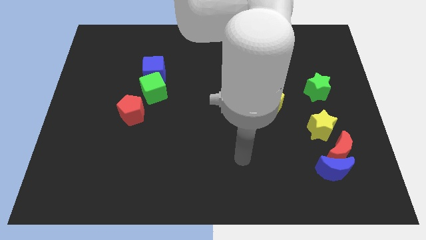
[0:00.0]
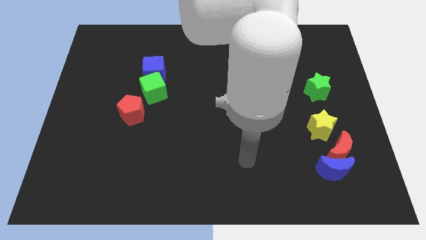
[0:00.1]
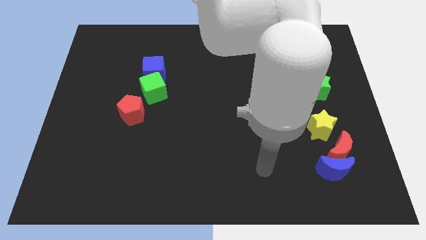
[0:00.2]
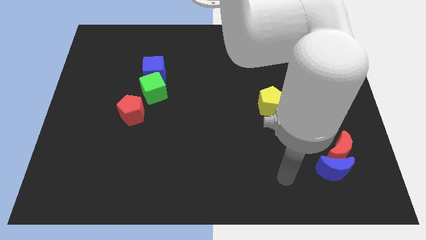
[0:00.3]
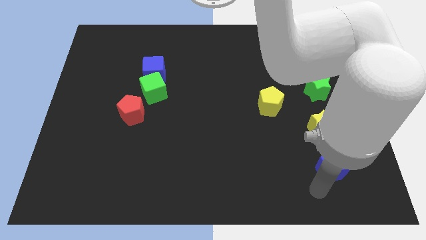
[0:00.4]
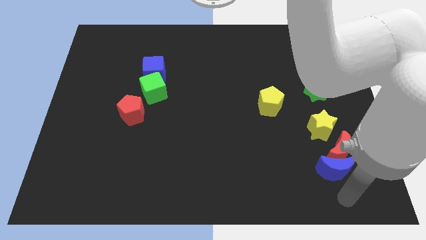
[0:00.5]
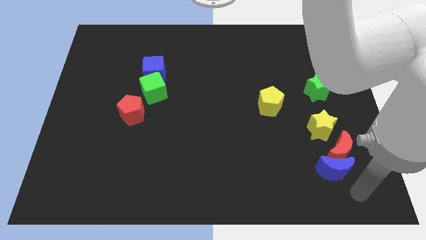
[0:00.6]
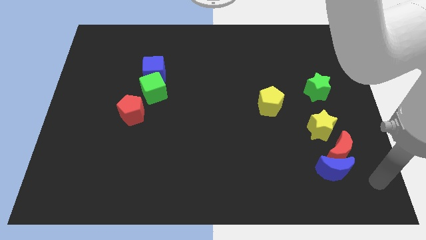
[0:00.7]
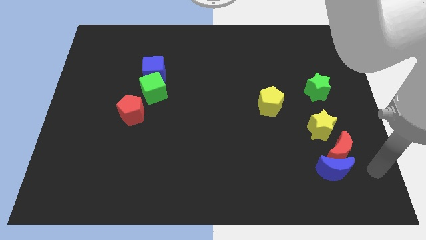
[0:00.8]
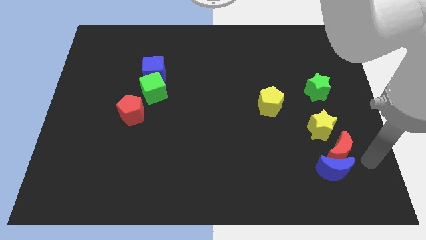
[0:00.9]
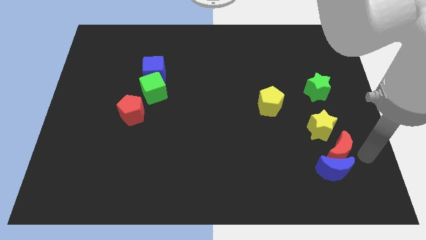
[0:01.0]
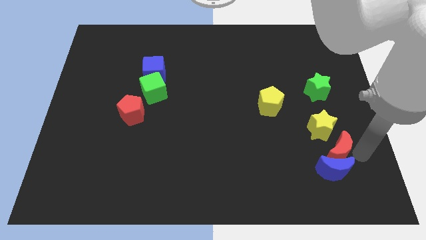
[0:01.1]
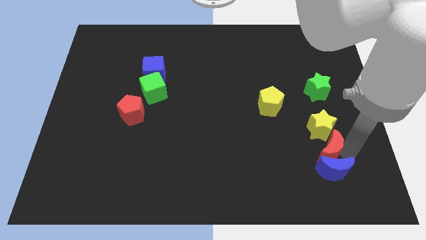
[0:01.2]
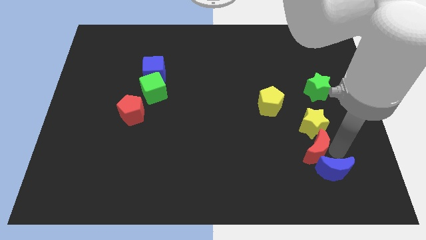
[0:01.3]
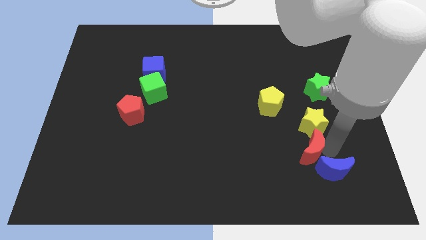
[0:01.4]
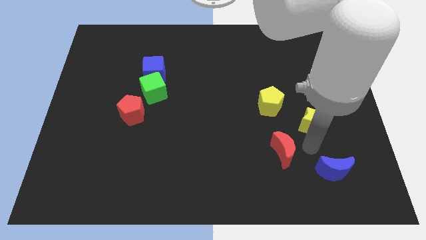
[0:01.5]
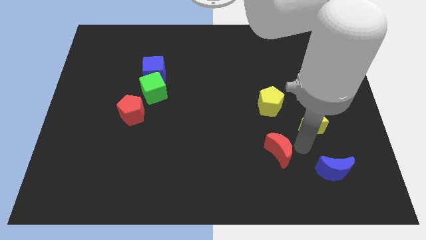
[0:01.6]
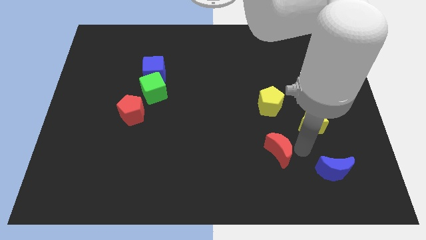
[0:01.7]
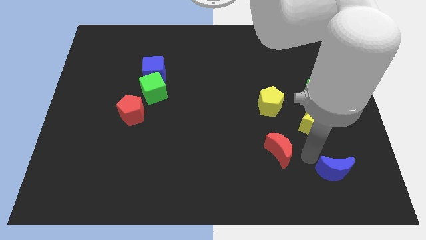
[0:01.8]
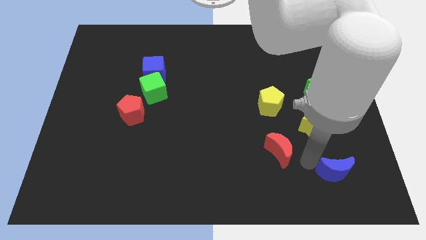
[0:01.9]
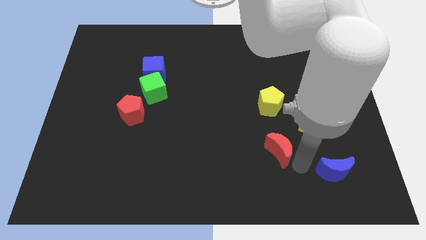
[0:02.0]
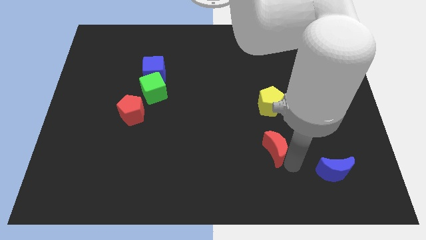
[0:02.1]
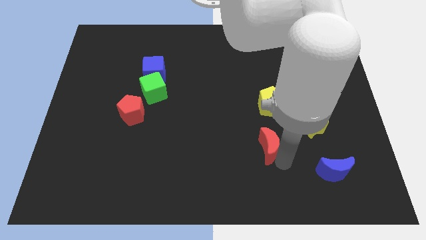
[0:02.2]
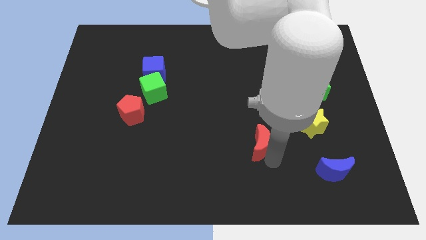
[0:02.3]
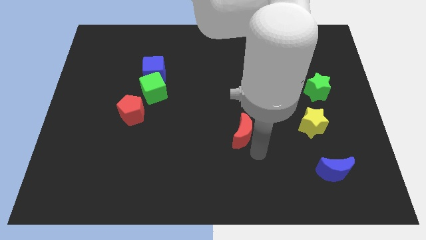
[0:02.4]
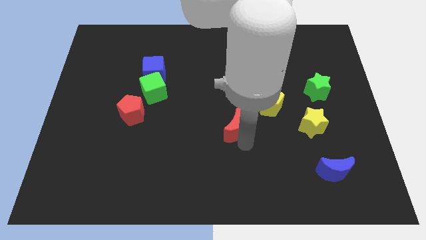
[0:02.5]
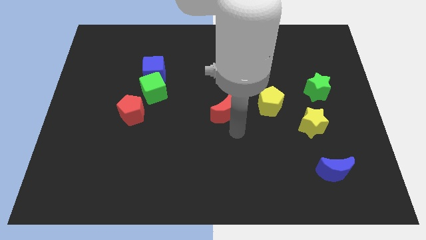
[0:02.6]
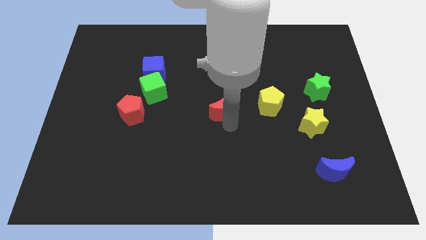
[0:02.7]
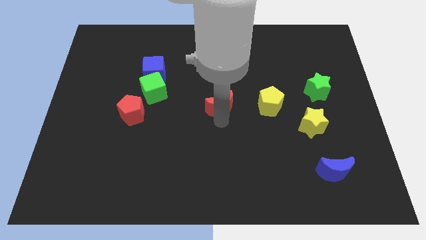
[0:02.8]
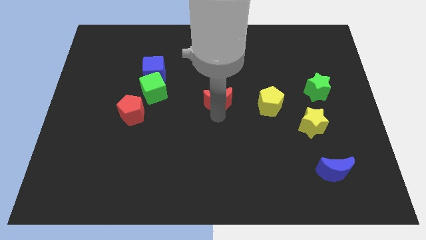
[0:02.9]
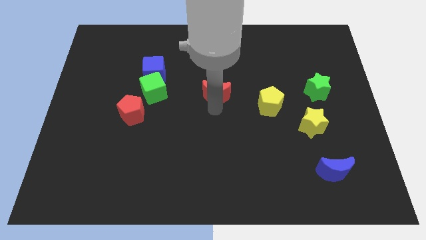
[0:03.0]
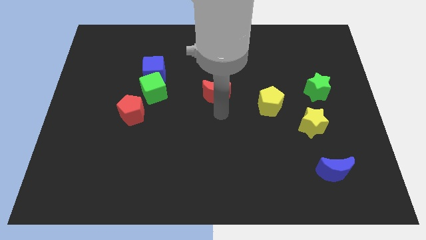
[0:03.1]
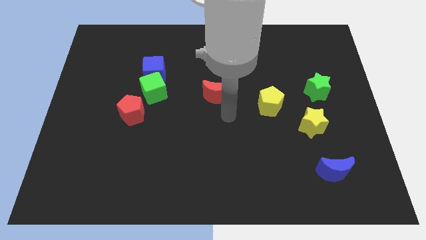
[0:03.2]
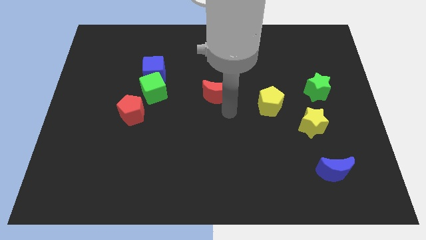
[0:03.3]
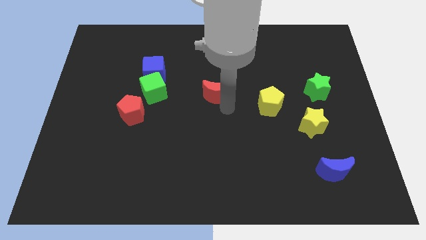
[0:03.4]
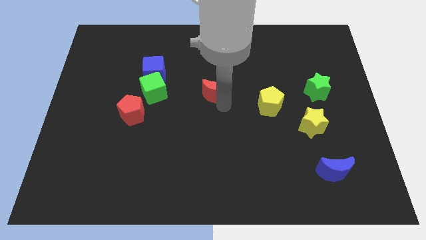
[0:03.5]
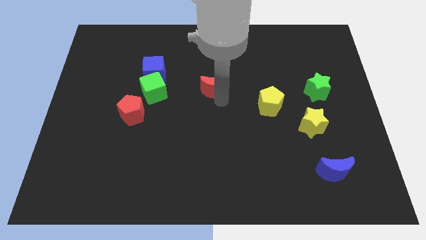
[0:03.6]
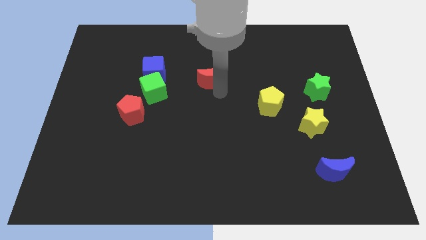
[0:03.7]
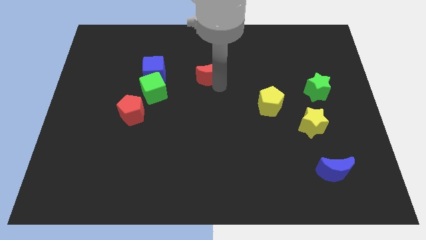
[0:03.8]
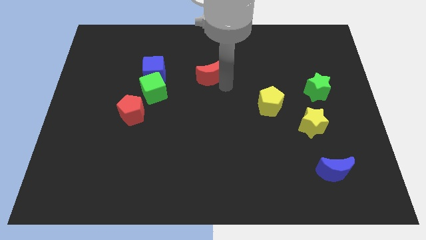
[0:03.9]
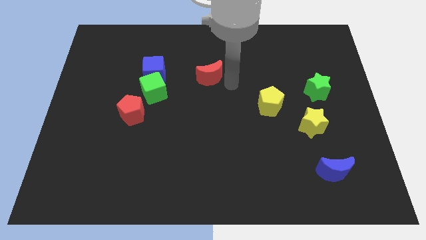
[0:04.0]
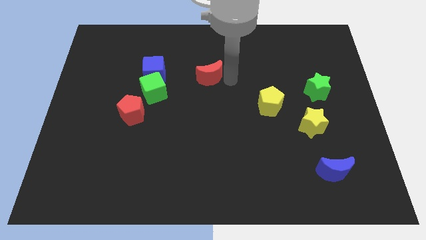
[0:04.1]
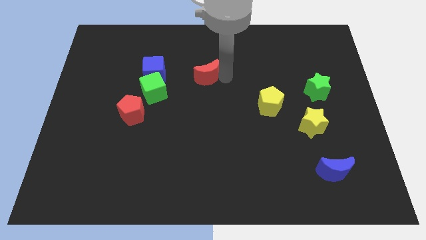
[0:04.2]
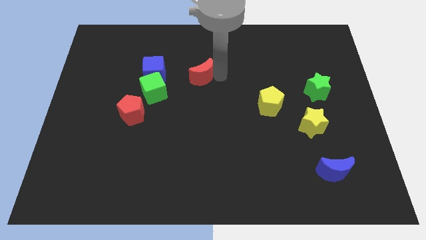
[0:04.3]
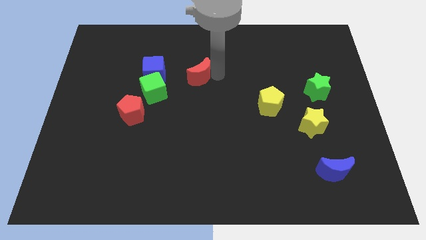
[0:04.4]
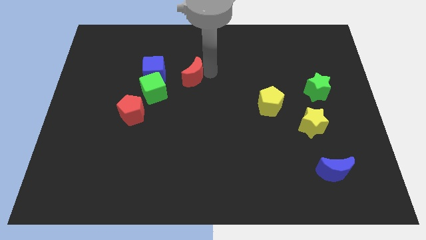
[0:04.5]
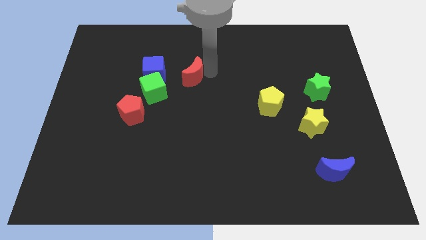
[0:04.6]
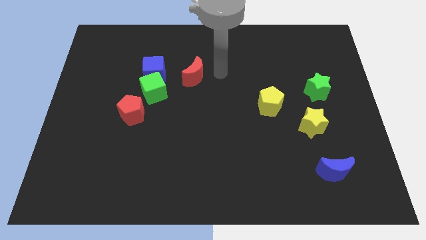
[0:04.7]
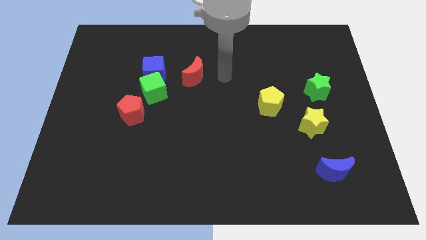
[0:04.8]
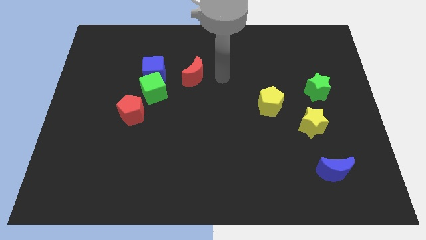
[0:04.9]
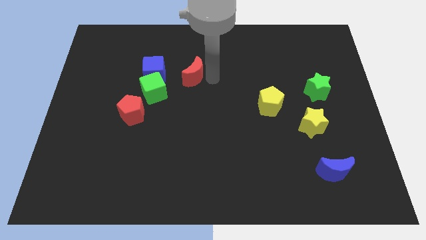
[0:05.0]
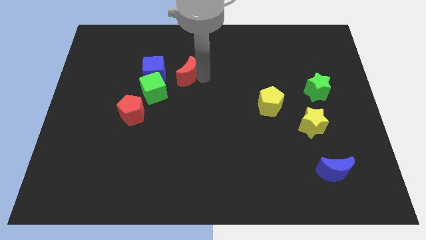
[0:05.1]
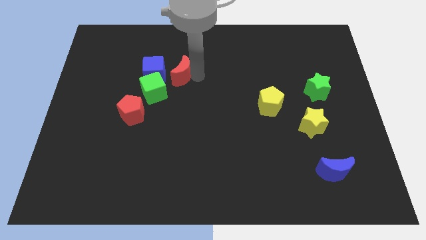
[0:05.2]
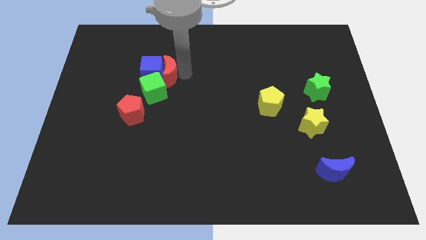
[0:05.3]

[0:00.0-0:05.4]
push the red moon to the blue cube

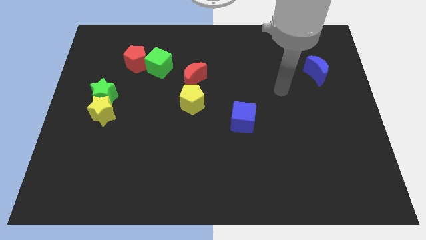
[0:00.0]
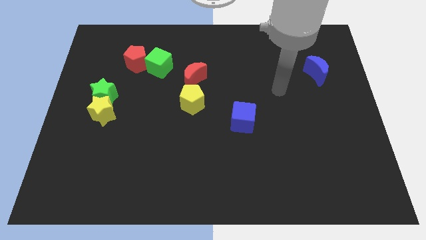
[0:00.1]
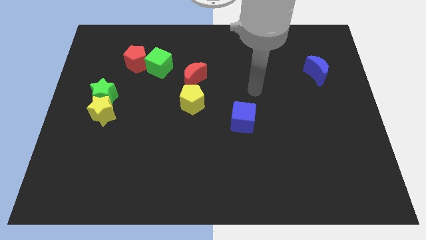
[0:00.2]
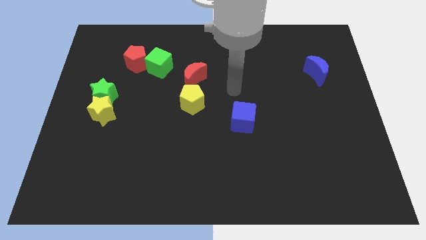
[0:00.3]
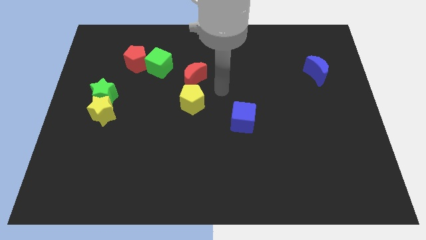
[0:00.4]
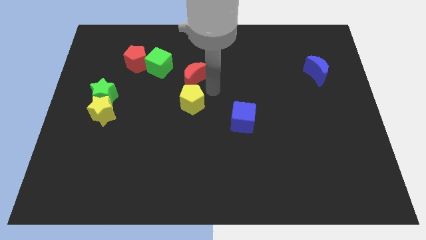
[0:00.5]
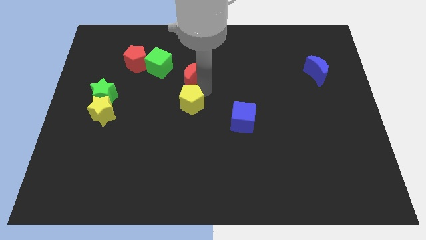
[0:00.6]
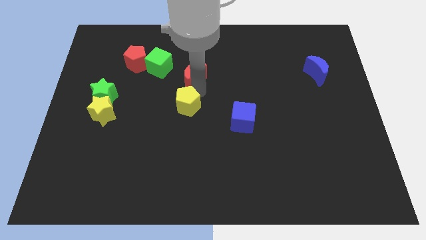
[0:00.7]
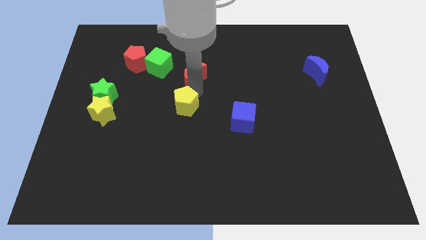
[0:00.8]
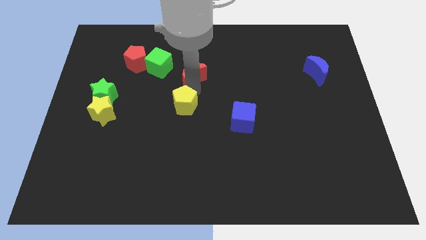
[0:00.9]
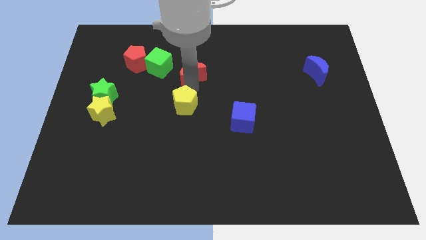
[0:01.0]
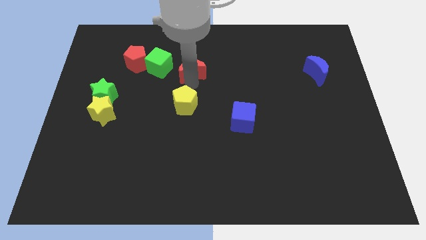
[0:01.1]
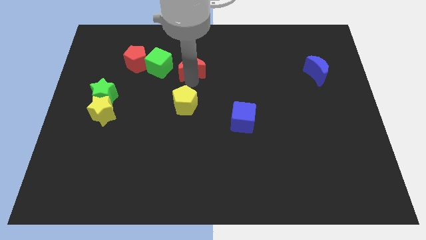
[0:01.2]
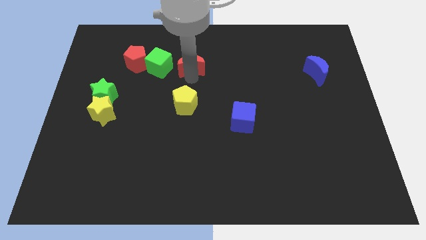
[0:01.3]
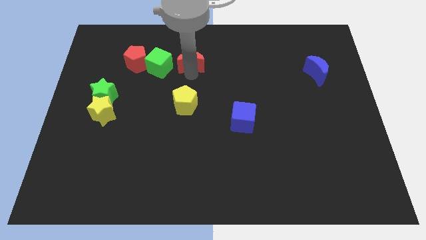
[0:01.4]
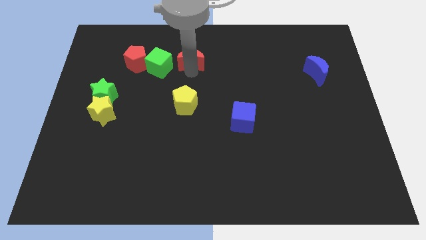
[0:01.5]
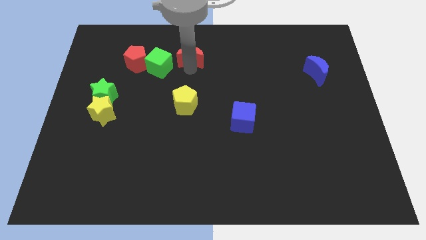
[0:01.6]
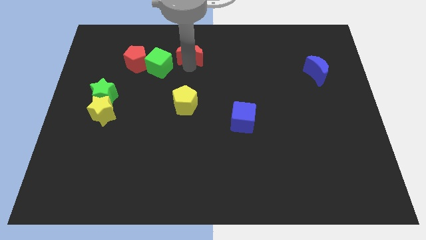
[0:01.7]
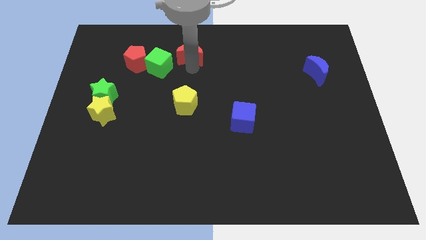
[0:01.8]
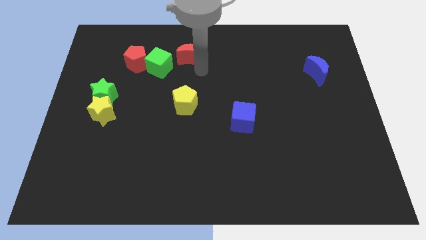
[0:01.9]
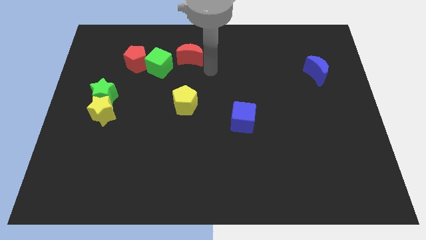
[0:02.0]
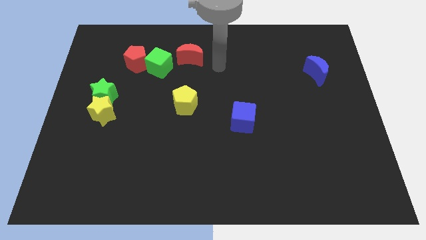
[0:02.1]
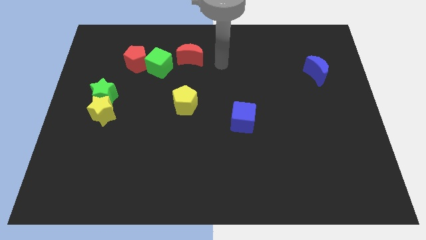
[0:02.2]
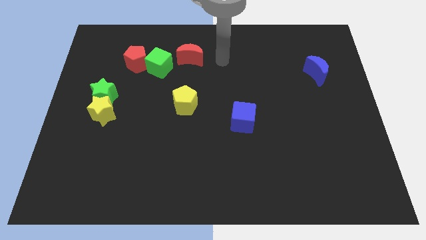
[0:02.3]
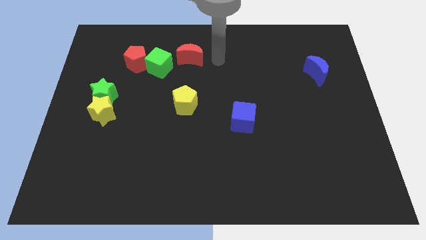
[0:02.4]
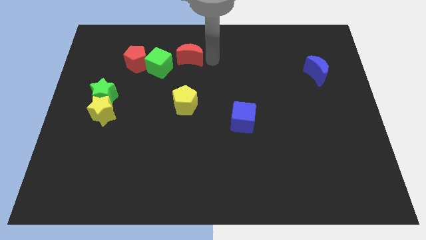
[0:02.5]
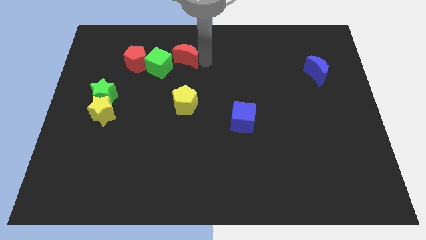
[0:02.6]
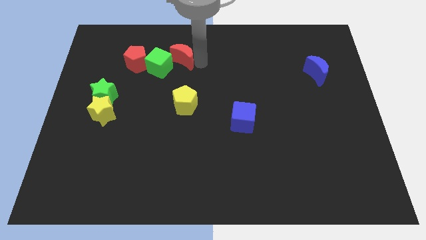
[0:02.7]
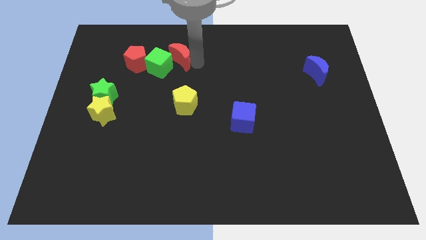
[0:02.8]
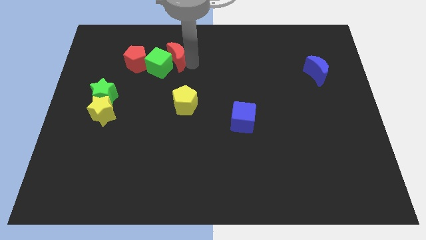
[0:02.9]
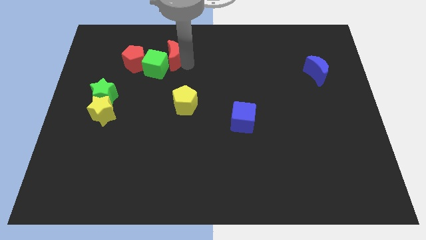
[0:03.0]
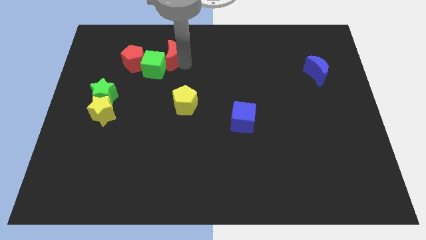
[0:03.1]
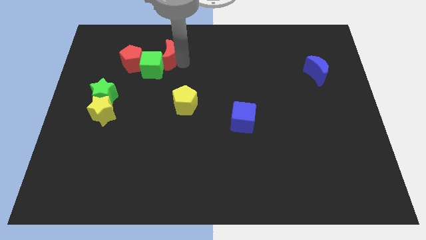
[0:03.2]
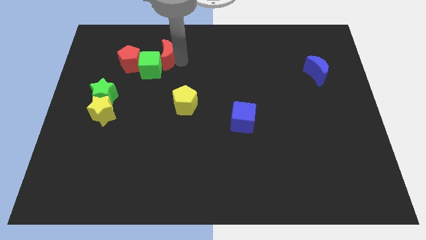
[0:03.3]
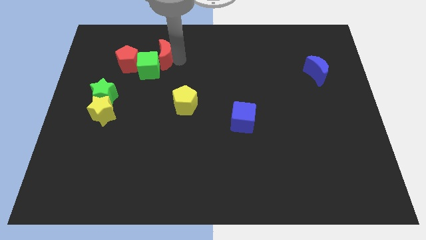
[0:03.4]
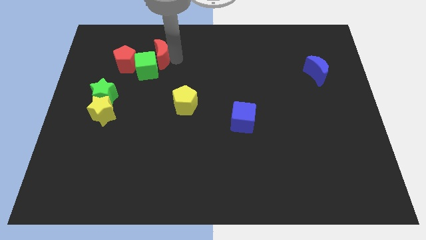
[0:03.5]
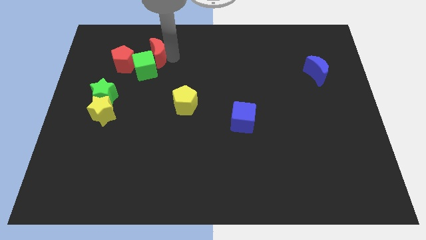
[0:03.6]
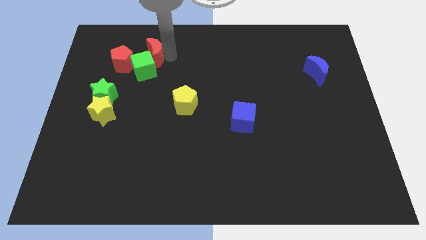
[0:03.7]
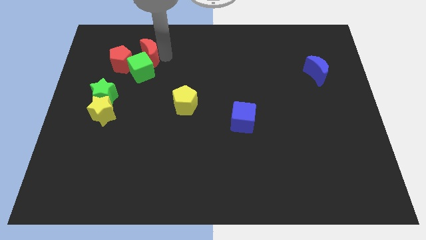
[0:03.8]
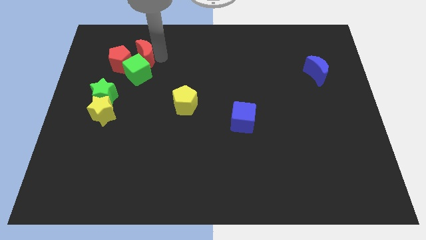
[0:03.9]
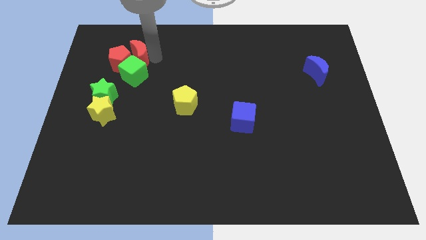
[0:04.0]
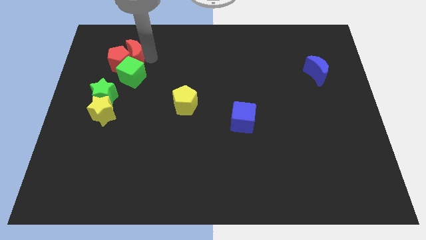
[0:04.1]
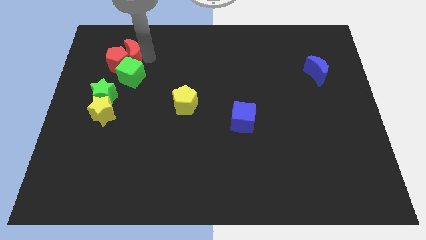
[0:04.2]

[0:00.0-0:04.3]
move the red moon towards the red pentagon
